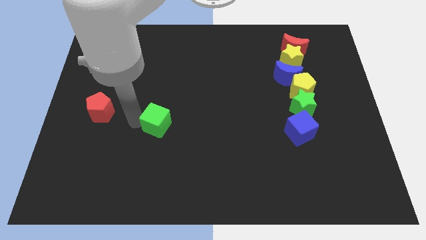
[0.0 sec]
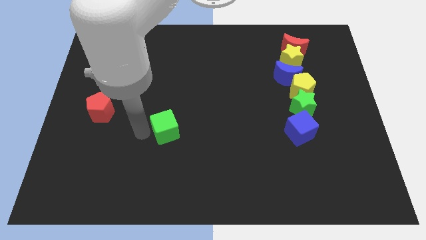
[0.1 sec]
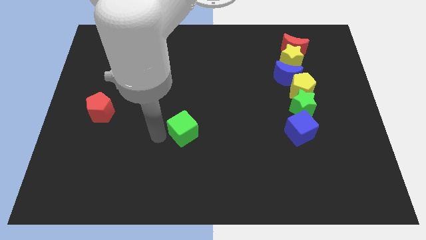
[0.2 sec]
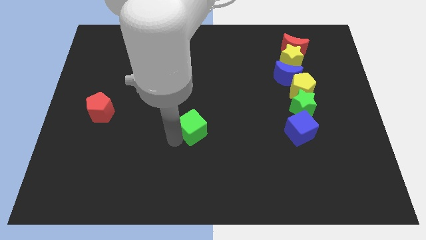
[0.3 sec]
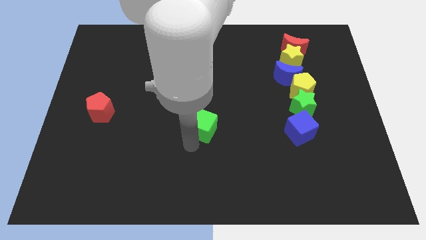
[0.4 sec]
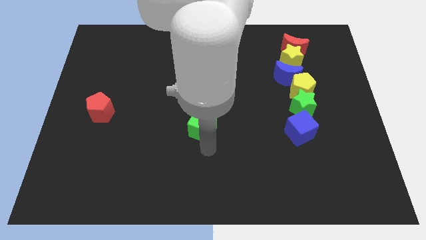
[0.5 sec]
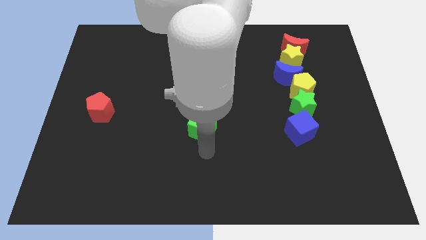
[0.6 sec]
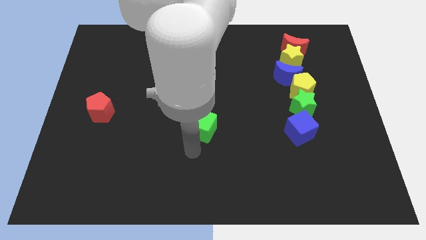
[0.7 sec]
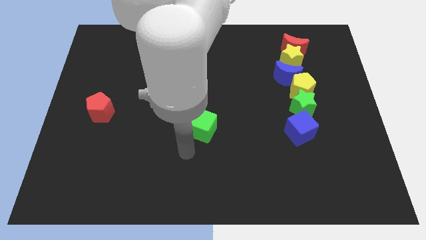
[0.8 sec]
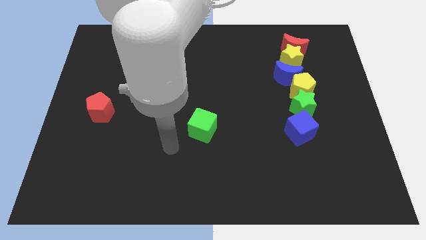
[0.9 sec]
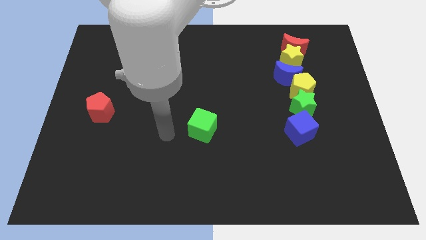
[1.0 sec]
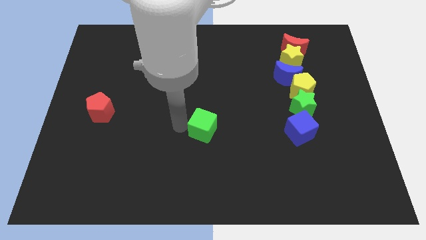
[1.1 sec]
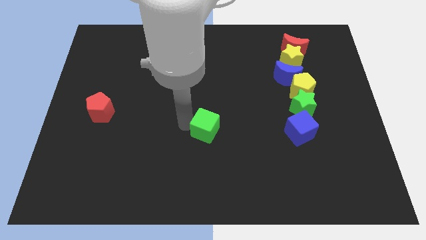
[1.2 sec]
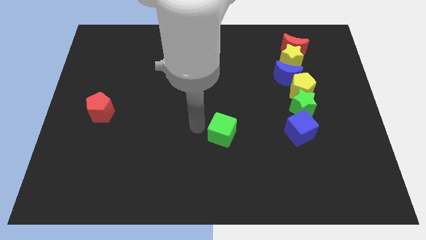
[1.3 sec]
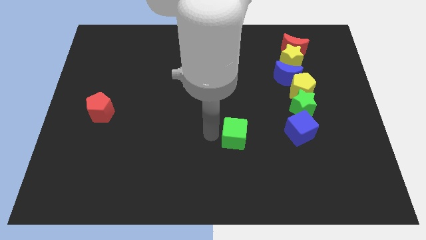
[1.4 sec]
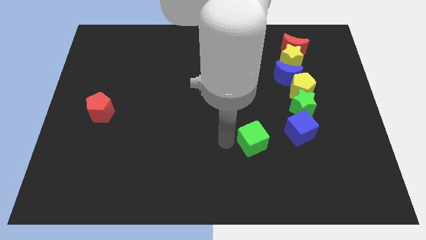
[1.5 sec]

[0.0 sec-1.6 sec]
push the green cube to the left side of the blue cube

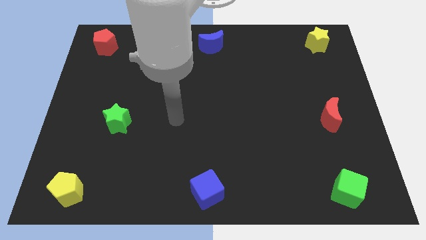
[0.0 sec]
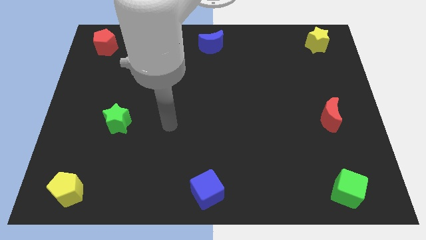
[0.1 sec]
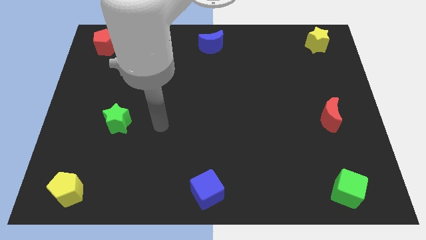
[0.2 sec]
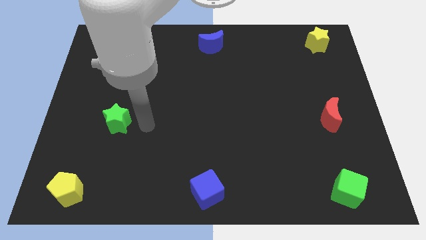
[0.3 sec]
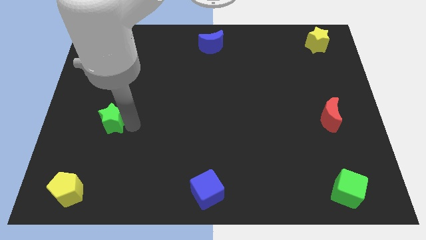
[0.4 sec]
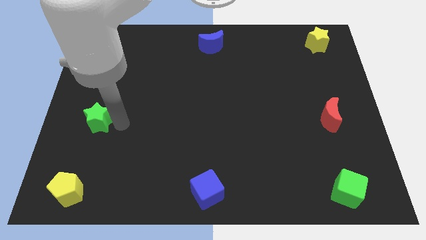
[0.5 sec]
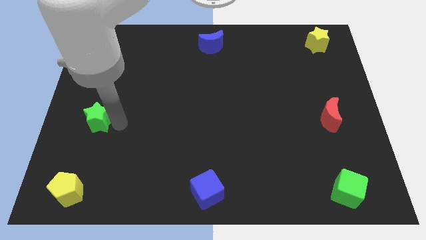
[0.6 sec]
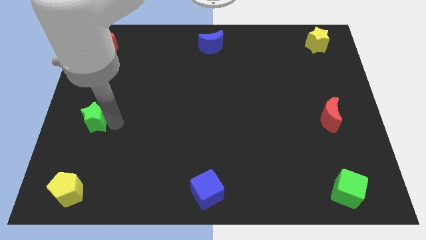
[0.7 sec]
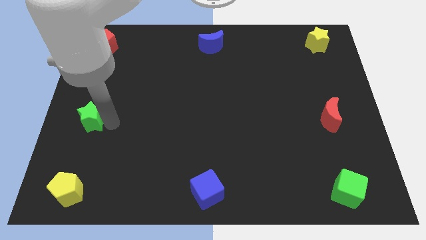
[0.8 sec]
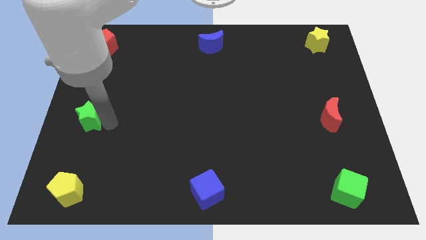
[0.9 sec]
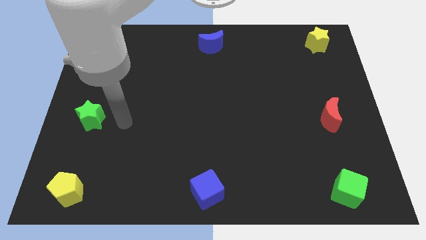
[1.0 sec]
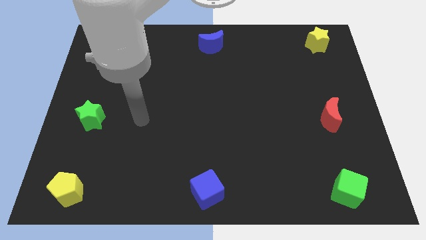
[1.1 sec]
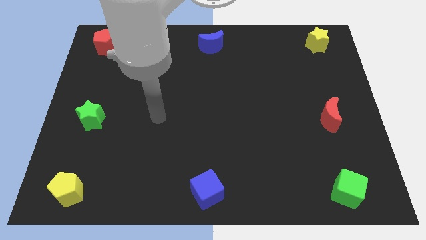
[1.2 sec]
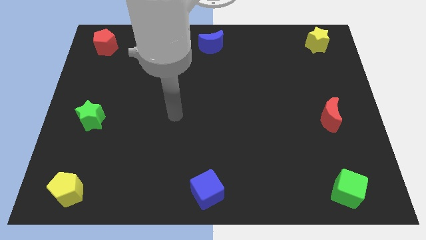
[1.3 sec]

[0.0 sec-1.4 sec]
move the green star towards left a bit

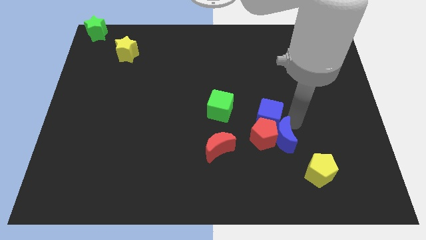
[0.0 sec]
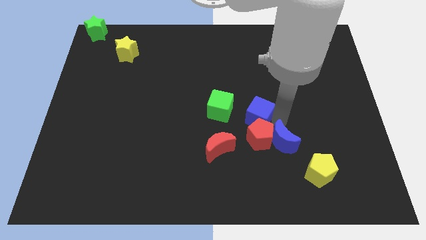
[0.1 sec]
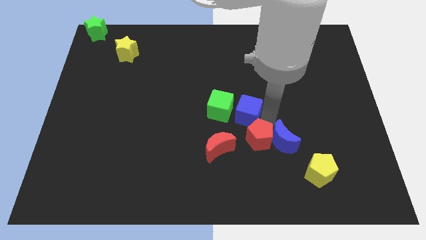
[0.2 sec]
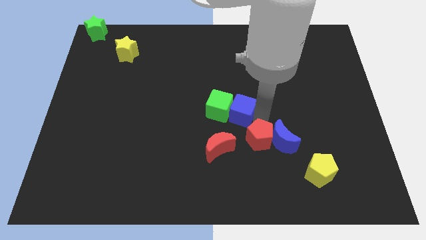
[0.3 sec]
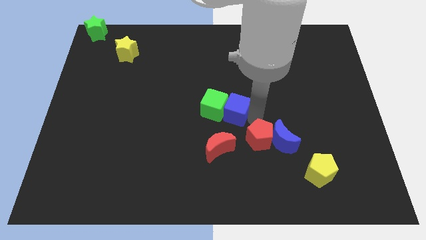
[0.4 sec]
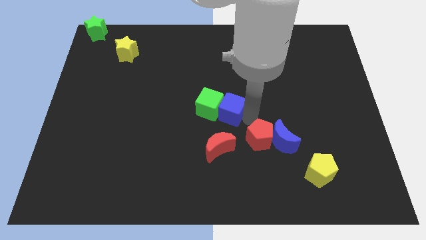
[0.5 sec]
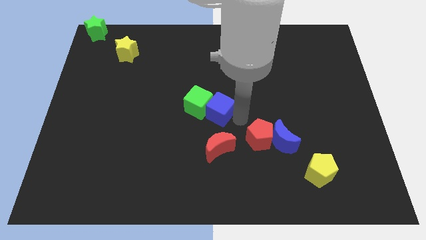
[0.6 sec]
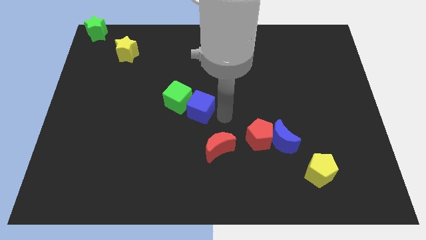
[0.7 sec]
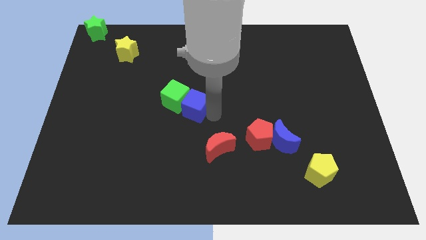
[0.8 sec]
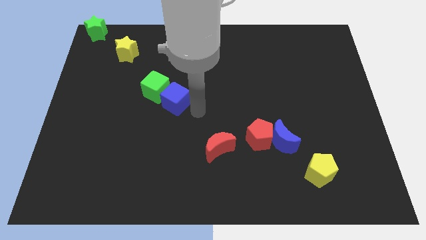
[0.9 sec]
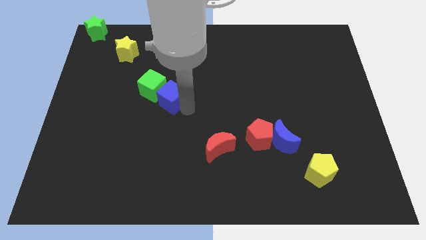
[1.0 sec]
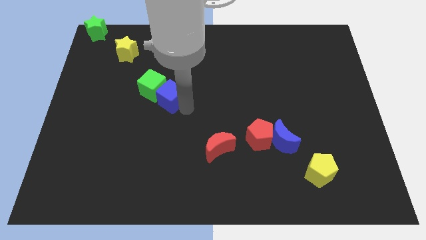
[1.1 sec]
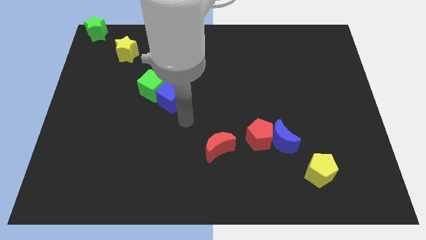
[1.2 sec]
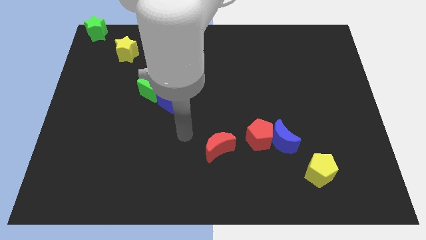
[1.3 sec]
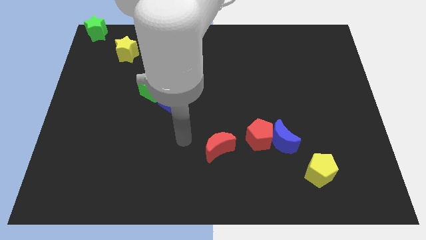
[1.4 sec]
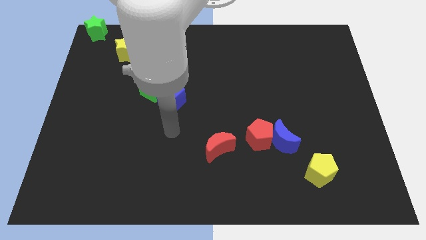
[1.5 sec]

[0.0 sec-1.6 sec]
drag both green and blue cubes towards the yellow star

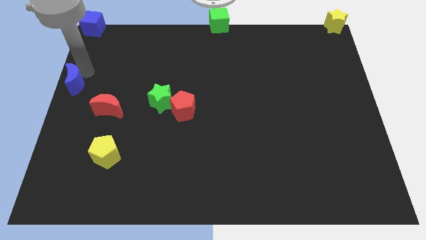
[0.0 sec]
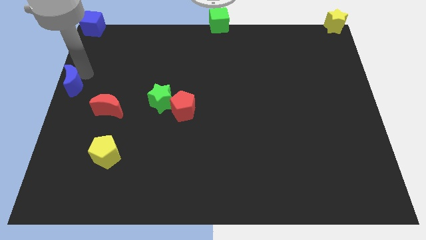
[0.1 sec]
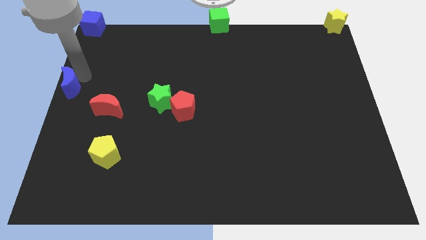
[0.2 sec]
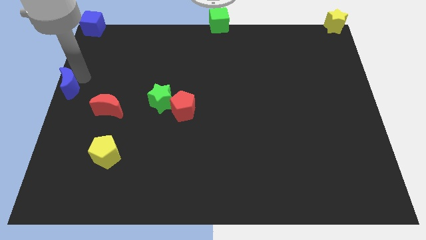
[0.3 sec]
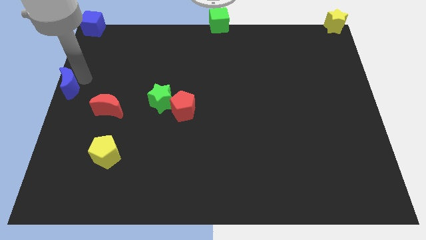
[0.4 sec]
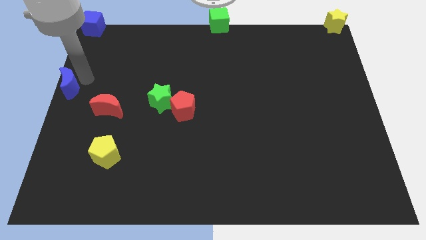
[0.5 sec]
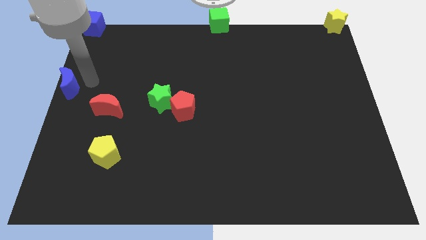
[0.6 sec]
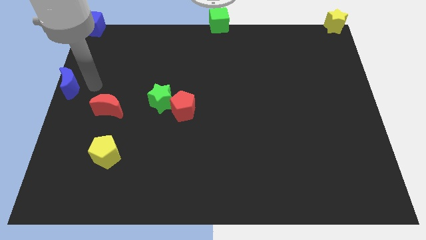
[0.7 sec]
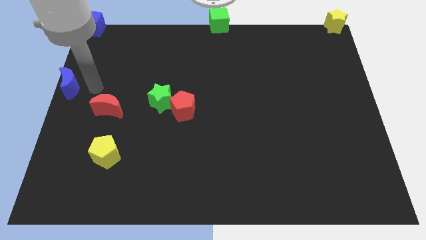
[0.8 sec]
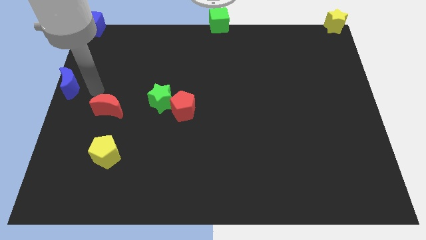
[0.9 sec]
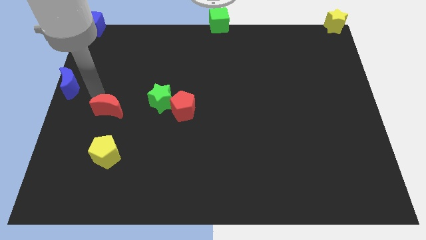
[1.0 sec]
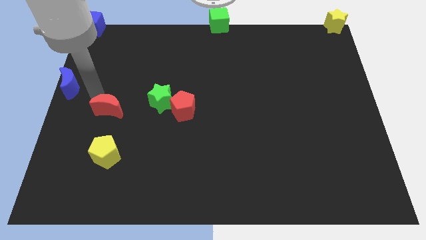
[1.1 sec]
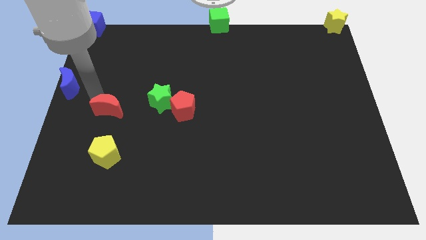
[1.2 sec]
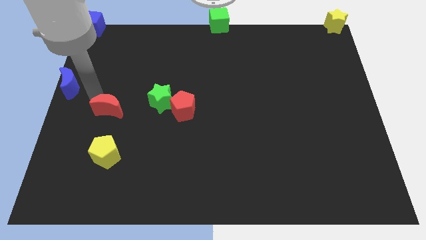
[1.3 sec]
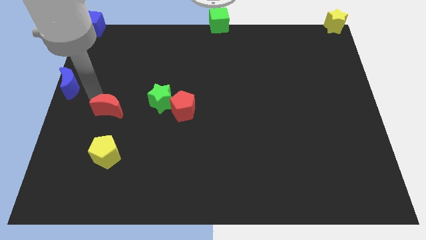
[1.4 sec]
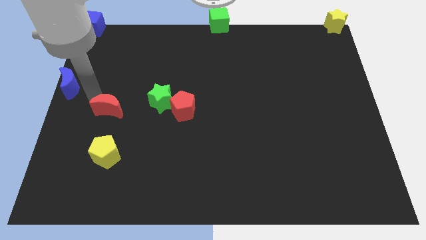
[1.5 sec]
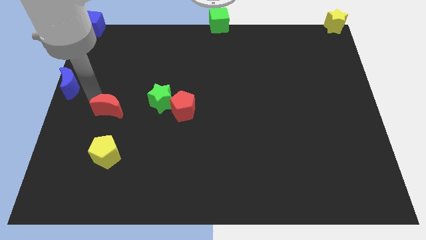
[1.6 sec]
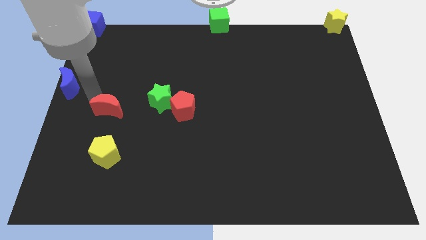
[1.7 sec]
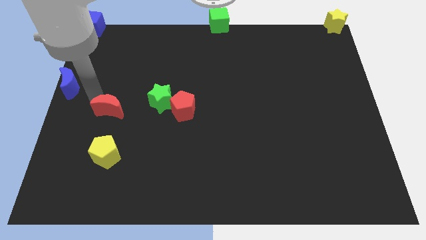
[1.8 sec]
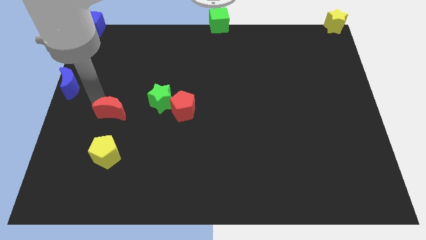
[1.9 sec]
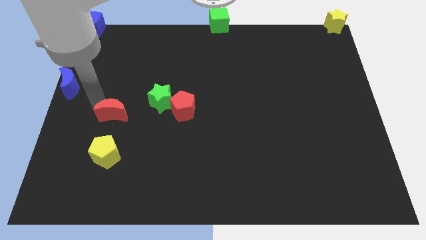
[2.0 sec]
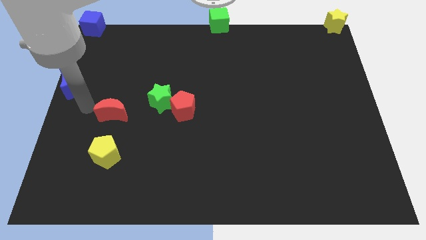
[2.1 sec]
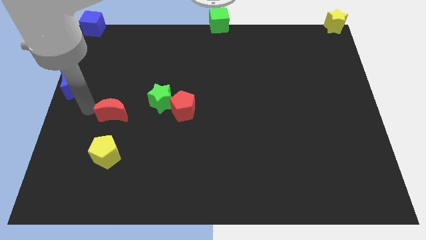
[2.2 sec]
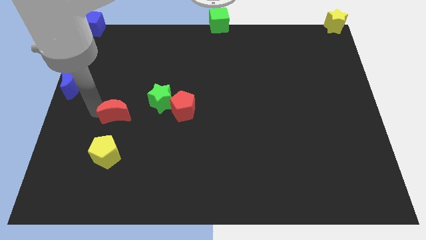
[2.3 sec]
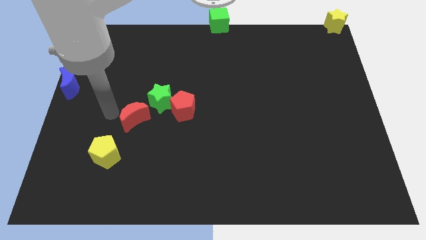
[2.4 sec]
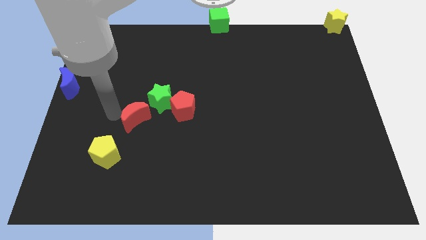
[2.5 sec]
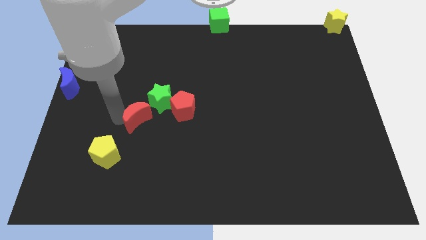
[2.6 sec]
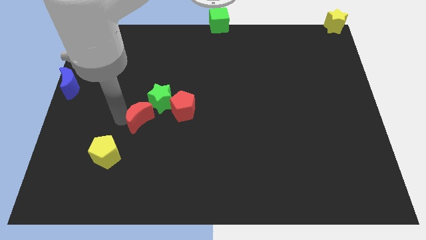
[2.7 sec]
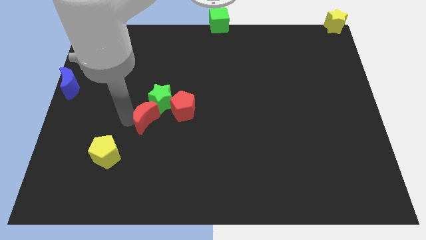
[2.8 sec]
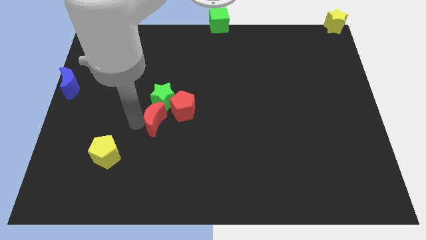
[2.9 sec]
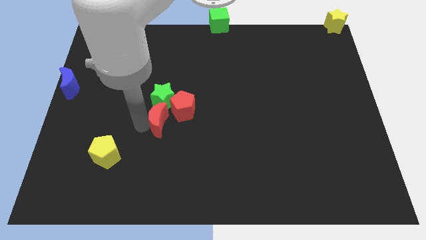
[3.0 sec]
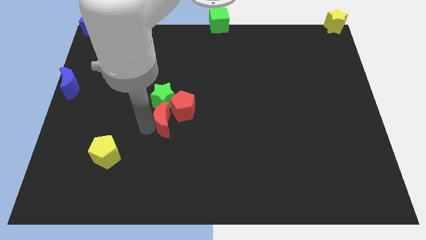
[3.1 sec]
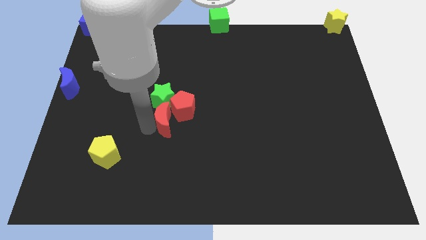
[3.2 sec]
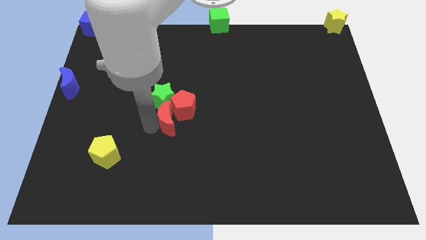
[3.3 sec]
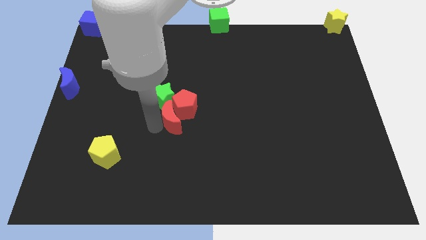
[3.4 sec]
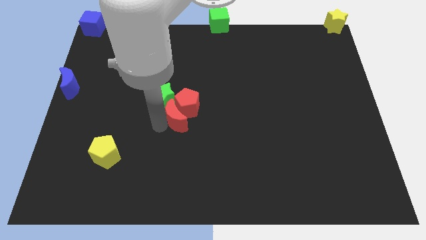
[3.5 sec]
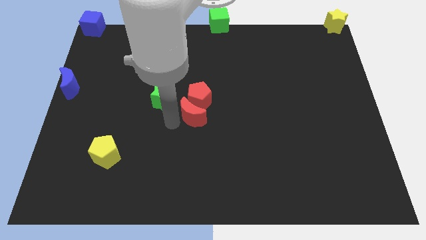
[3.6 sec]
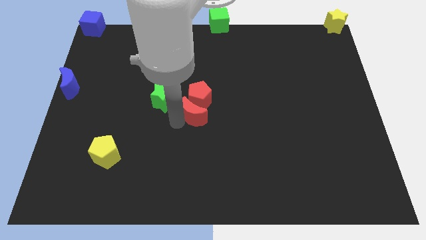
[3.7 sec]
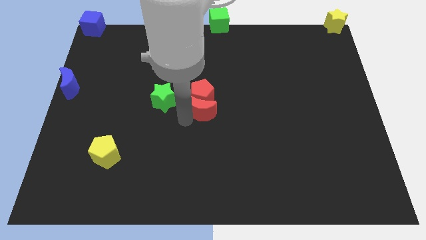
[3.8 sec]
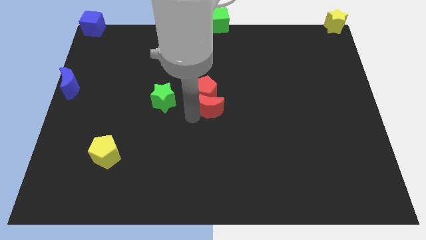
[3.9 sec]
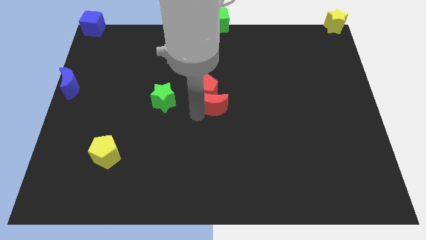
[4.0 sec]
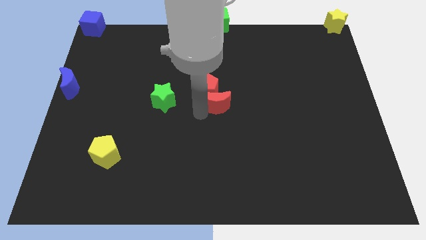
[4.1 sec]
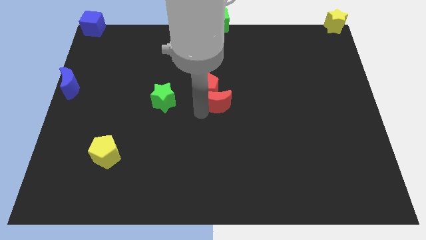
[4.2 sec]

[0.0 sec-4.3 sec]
push the red moon into the red pentagon
